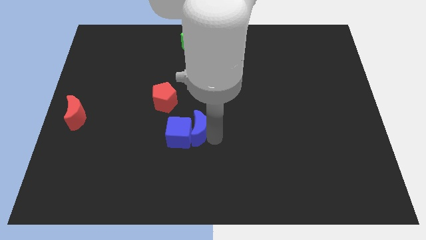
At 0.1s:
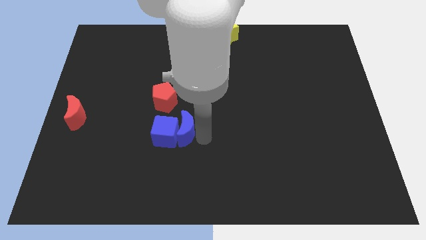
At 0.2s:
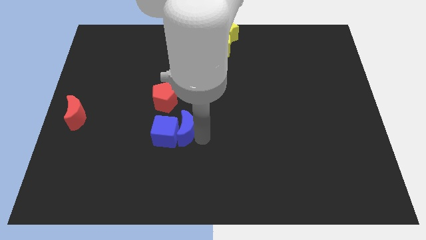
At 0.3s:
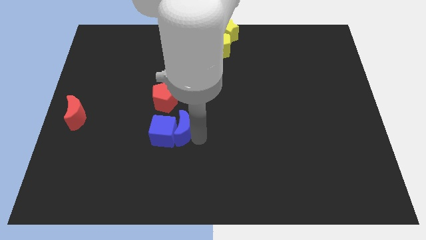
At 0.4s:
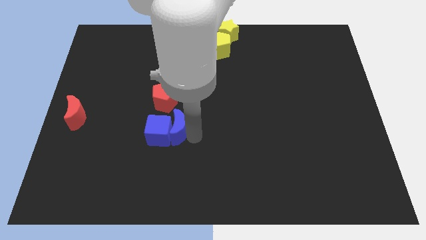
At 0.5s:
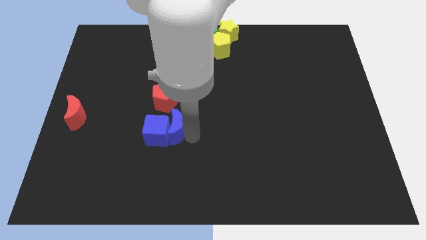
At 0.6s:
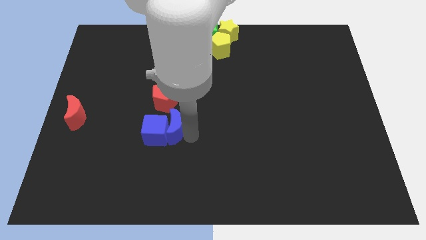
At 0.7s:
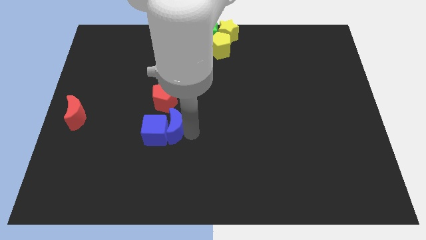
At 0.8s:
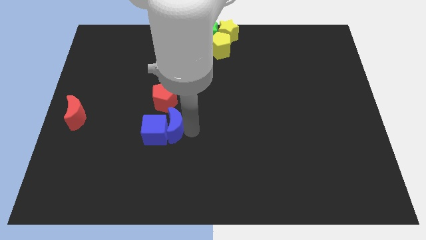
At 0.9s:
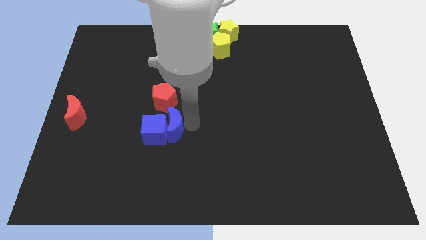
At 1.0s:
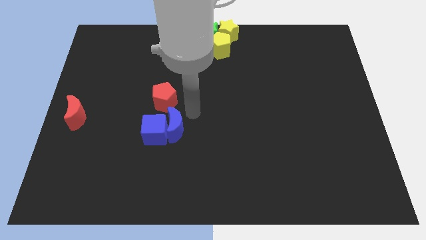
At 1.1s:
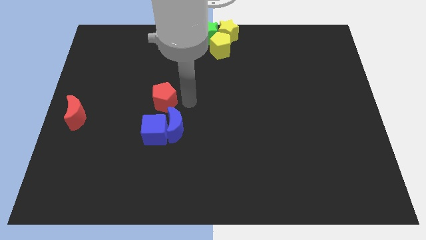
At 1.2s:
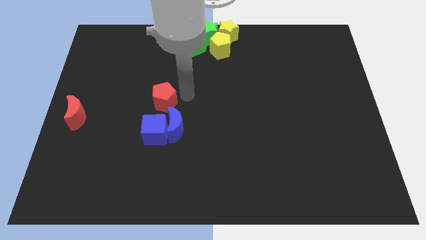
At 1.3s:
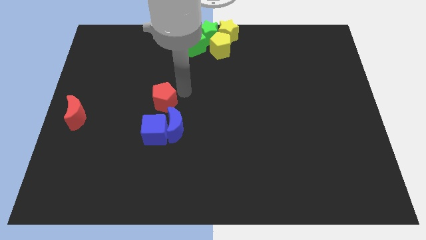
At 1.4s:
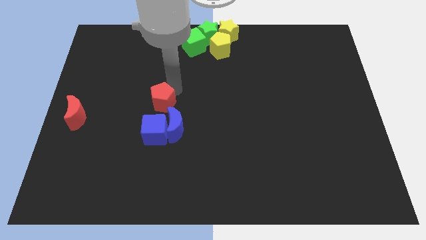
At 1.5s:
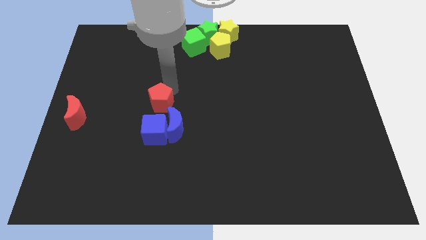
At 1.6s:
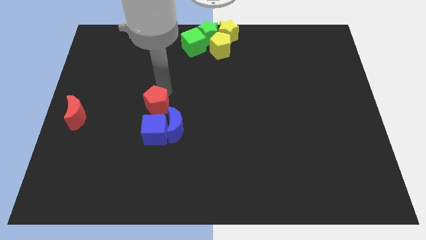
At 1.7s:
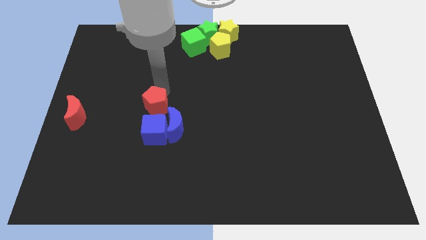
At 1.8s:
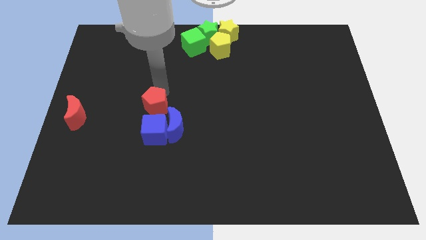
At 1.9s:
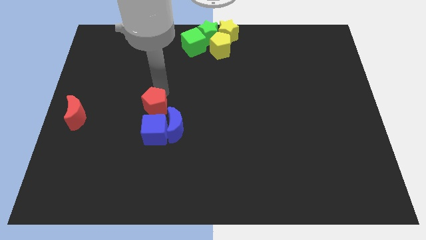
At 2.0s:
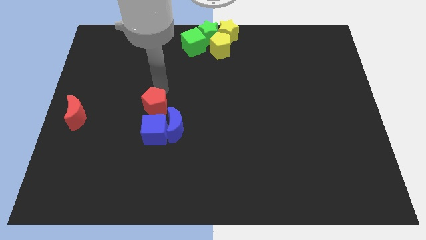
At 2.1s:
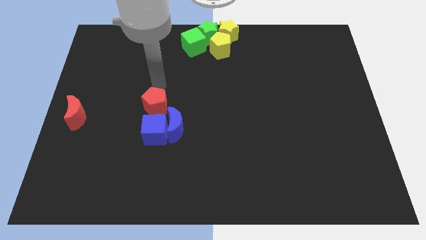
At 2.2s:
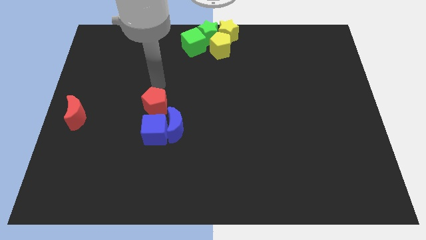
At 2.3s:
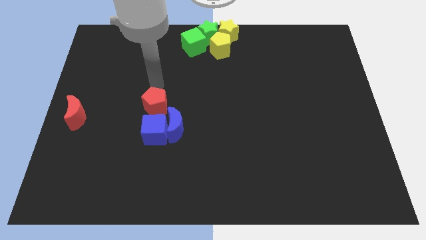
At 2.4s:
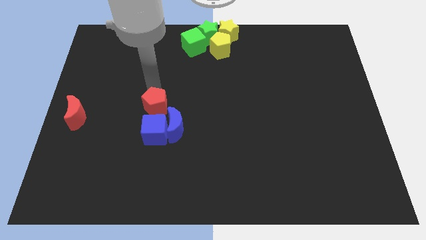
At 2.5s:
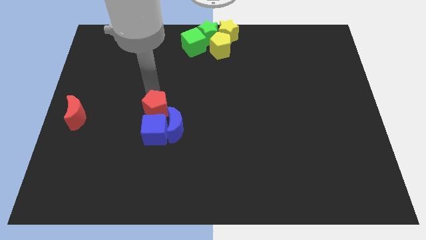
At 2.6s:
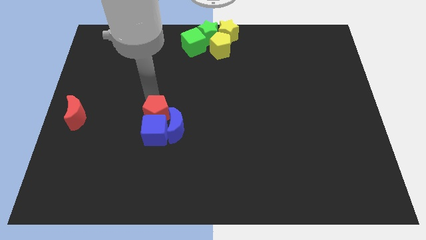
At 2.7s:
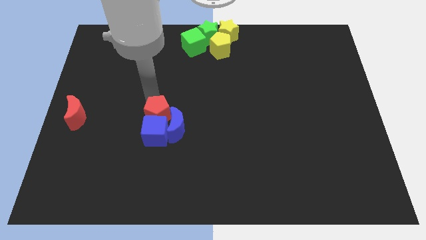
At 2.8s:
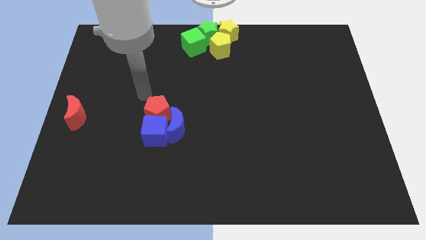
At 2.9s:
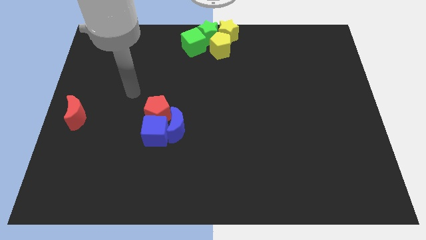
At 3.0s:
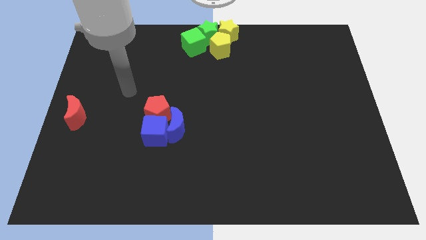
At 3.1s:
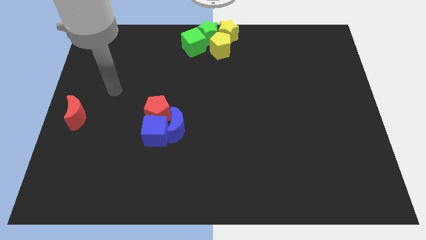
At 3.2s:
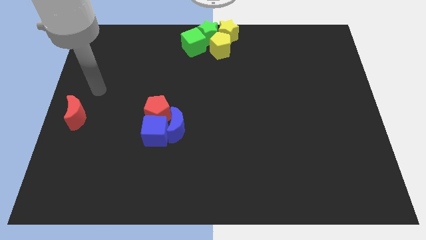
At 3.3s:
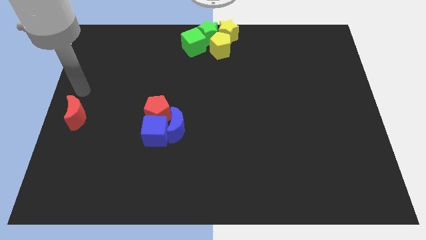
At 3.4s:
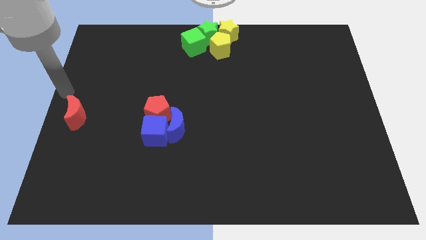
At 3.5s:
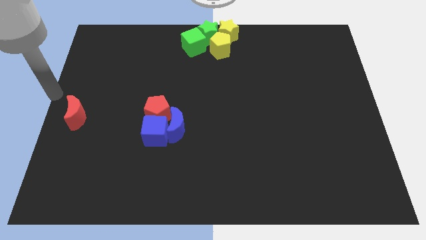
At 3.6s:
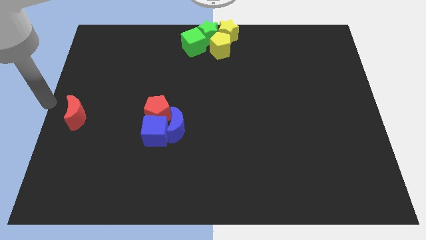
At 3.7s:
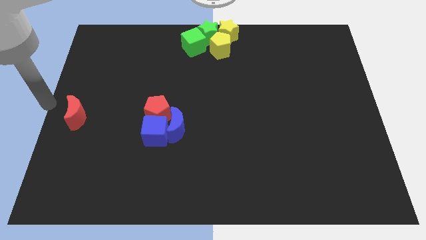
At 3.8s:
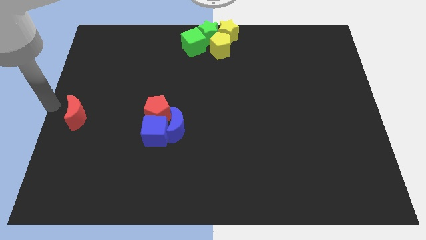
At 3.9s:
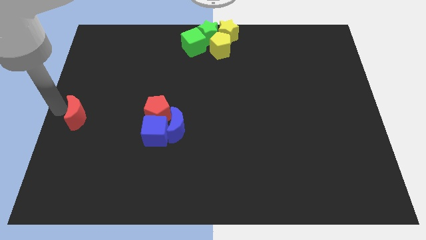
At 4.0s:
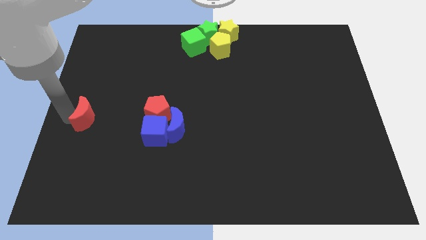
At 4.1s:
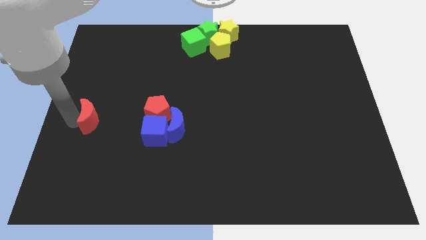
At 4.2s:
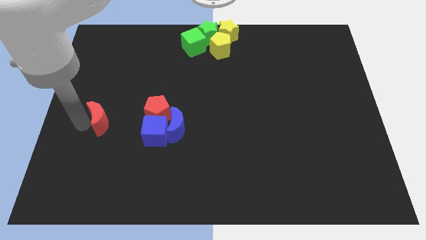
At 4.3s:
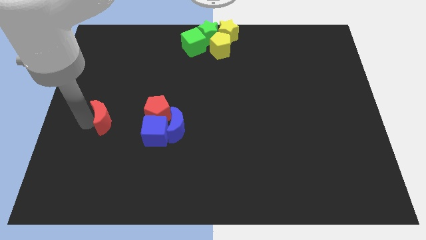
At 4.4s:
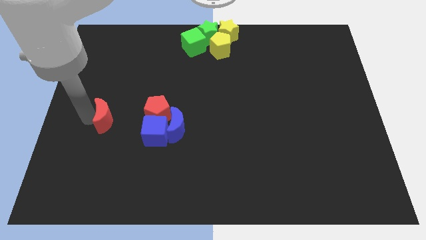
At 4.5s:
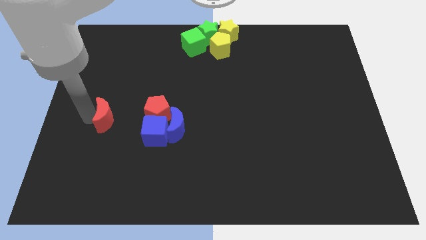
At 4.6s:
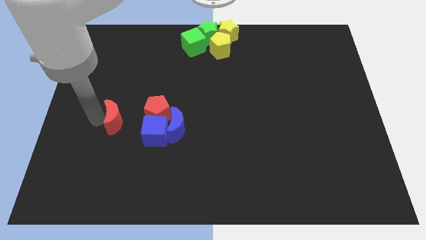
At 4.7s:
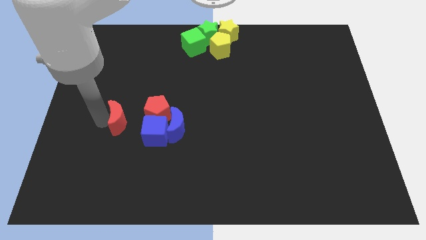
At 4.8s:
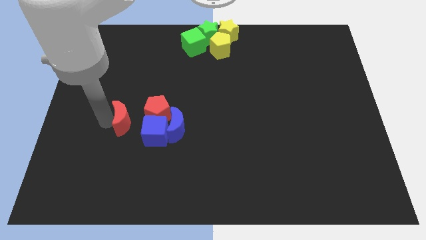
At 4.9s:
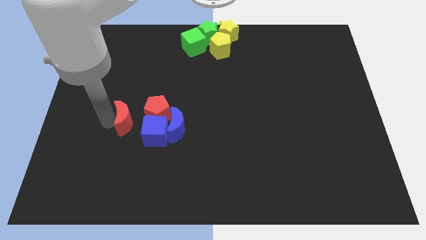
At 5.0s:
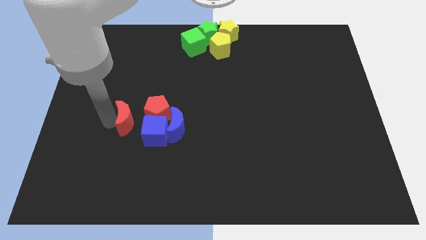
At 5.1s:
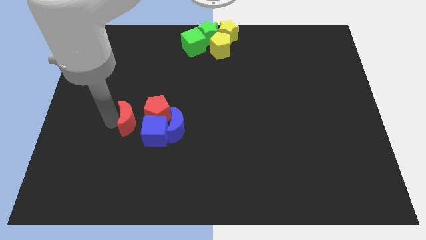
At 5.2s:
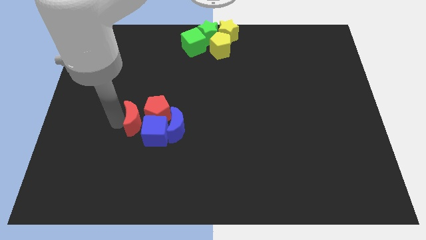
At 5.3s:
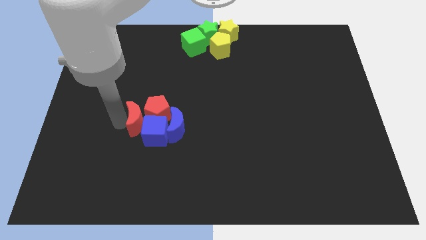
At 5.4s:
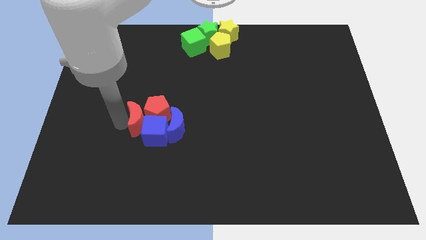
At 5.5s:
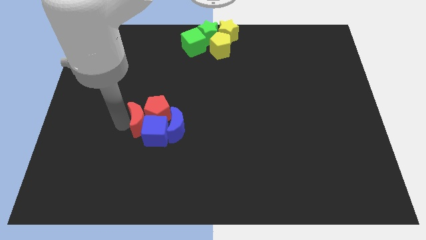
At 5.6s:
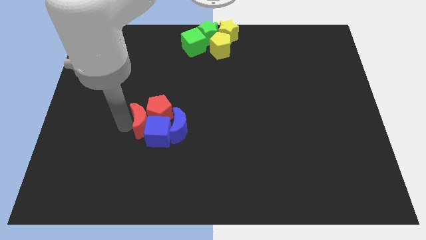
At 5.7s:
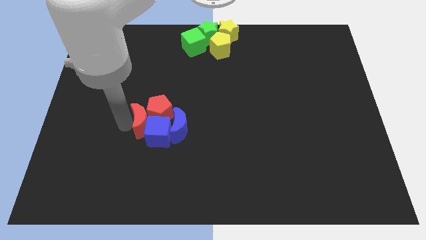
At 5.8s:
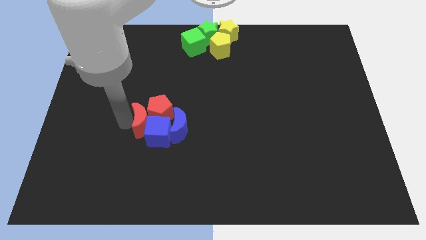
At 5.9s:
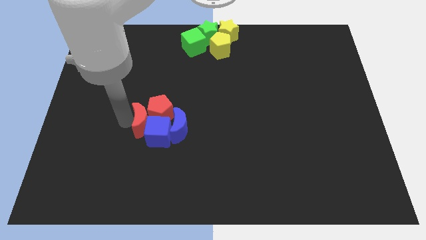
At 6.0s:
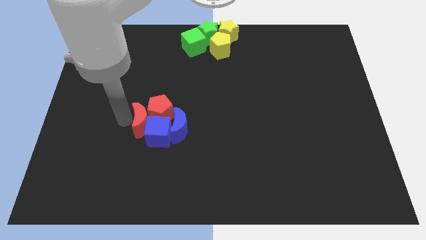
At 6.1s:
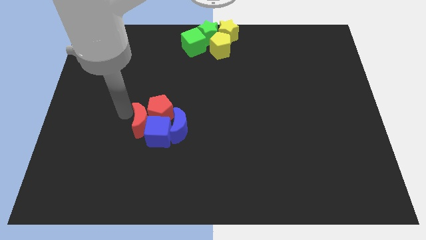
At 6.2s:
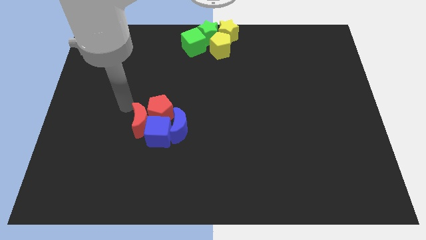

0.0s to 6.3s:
group up the blue and red blocks together at the left side of the board

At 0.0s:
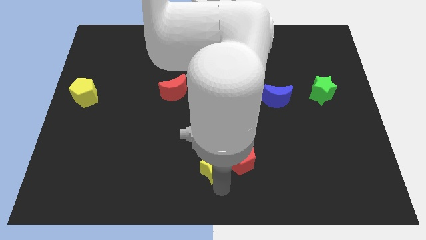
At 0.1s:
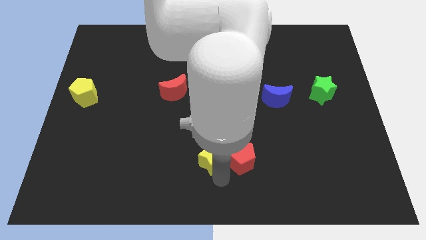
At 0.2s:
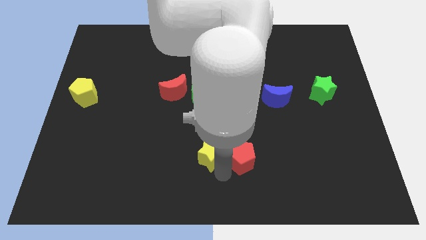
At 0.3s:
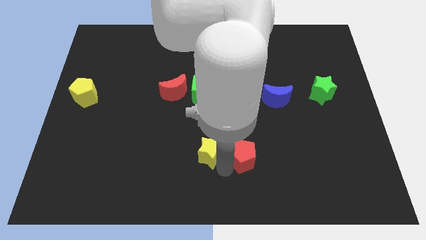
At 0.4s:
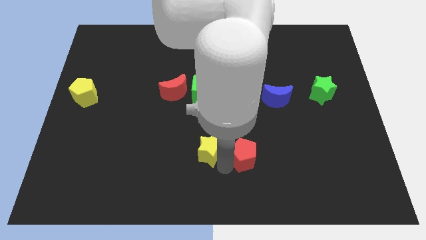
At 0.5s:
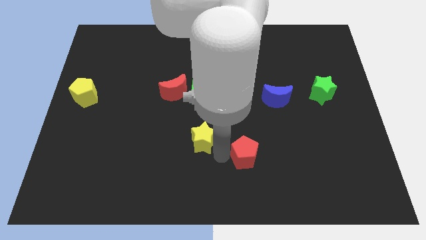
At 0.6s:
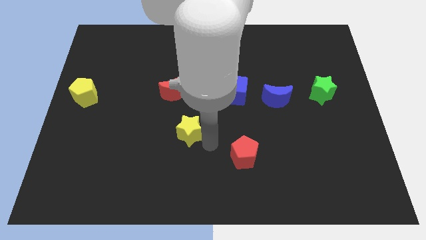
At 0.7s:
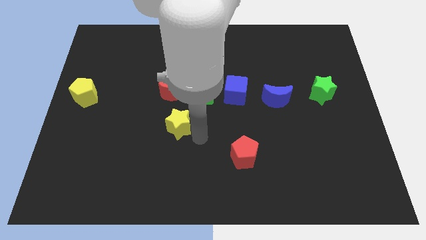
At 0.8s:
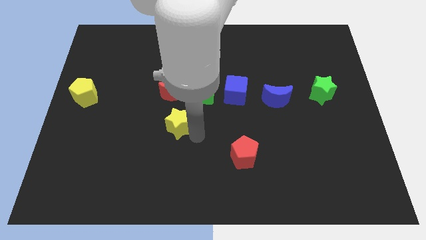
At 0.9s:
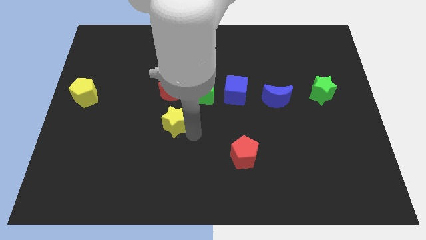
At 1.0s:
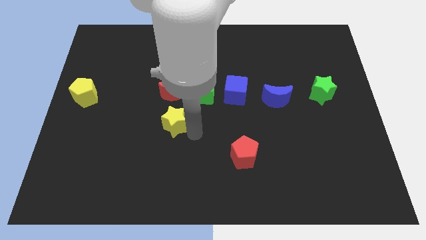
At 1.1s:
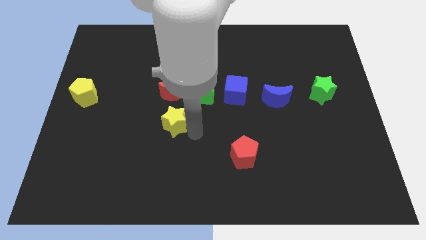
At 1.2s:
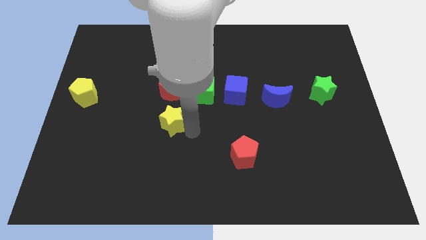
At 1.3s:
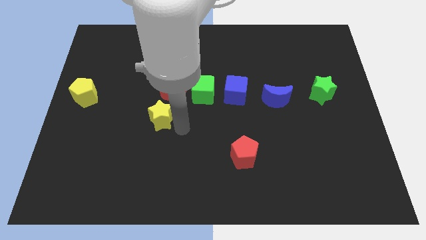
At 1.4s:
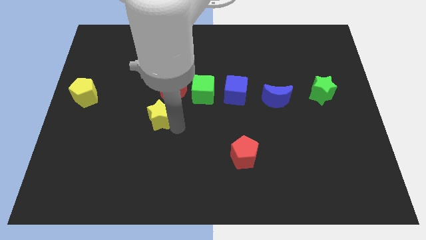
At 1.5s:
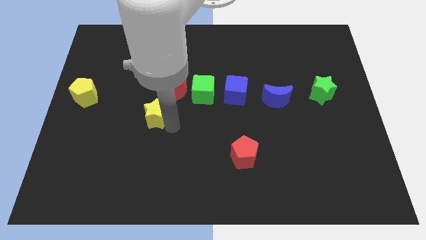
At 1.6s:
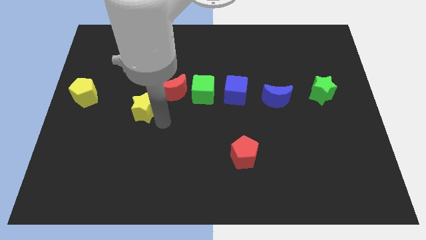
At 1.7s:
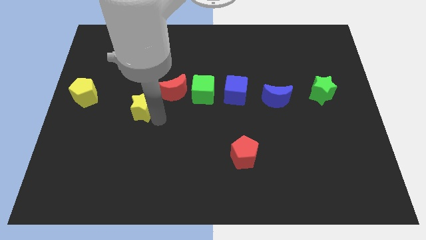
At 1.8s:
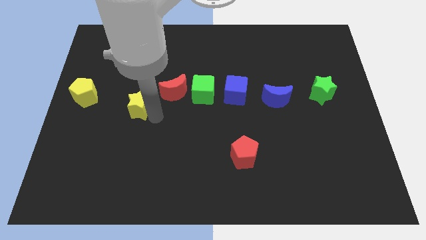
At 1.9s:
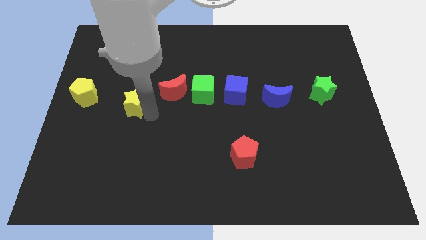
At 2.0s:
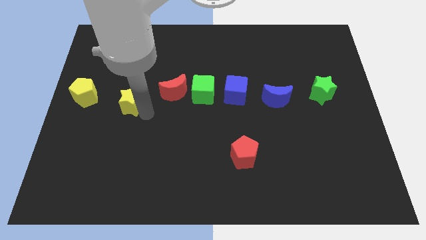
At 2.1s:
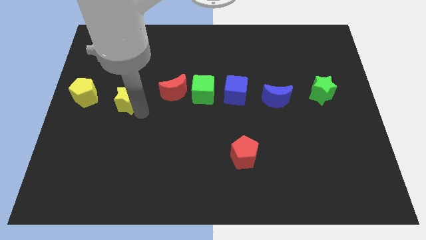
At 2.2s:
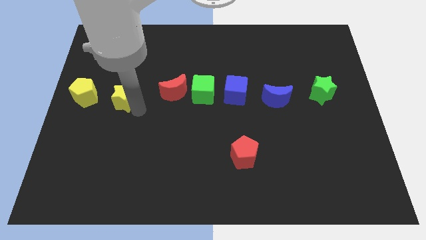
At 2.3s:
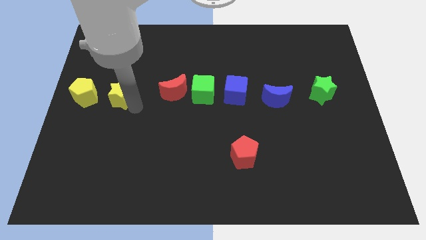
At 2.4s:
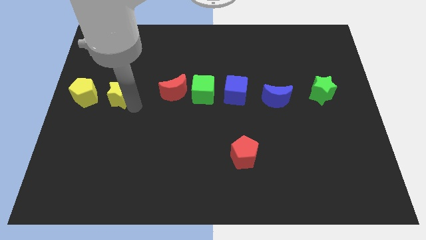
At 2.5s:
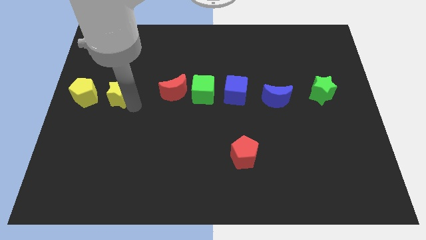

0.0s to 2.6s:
move the yellow star right to the yellow pentagon
